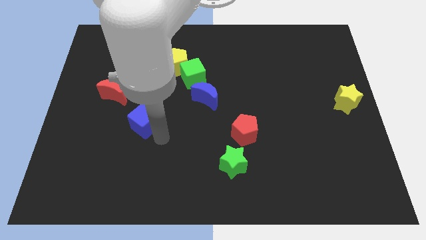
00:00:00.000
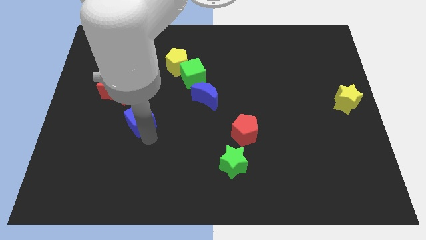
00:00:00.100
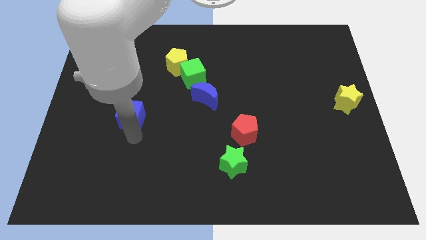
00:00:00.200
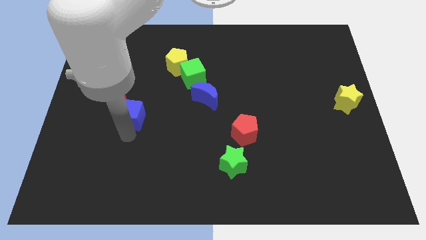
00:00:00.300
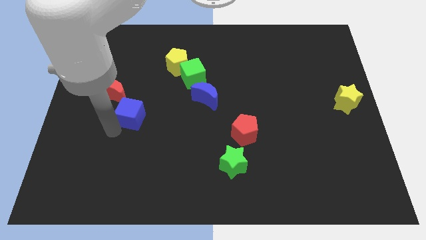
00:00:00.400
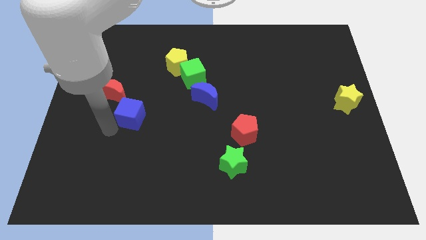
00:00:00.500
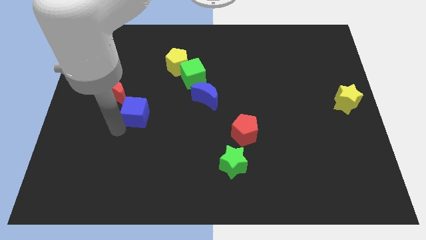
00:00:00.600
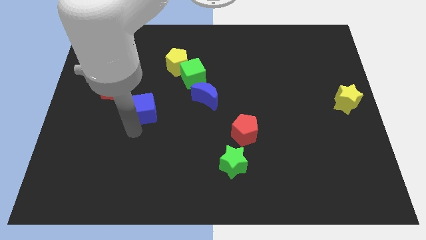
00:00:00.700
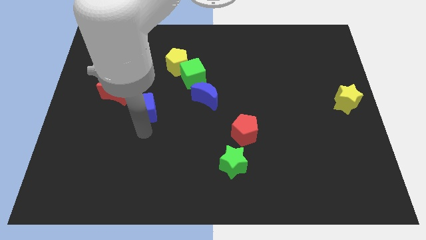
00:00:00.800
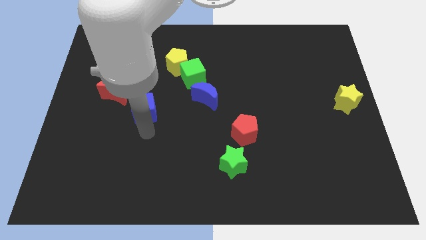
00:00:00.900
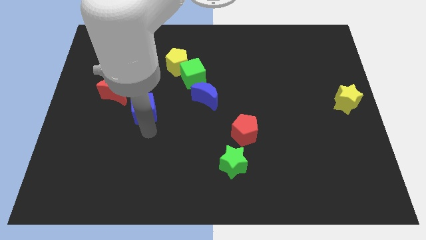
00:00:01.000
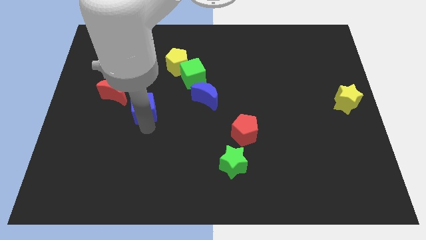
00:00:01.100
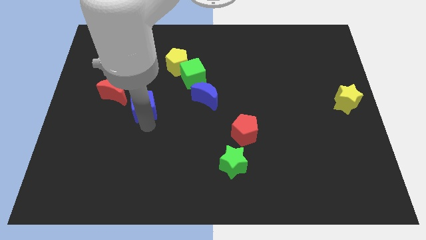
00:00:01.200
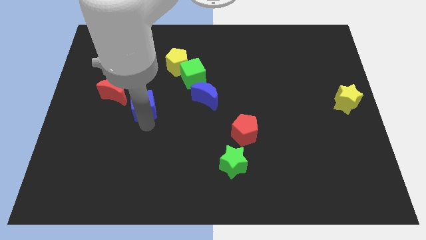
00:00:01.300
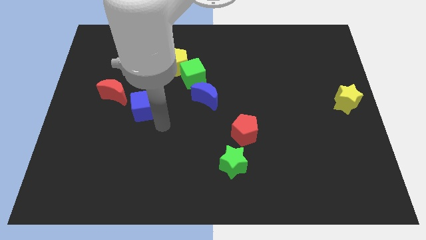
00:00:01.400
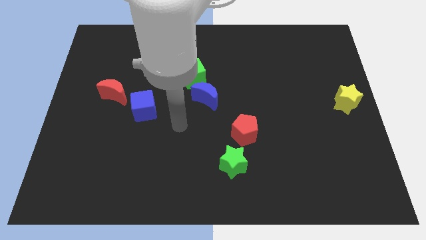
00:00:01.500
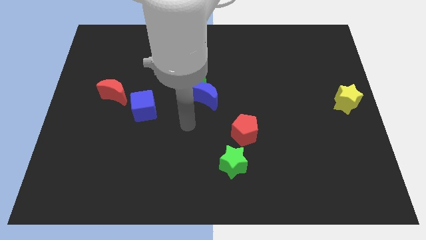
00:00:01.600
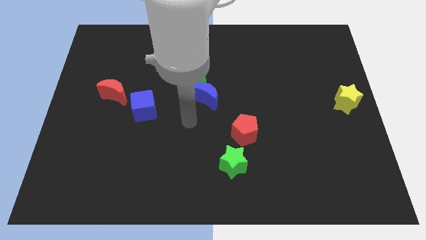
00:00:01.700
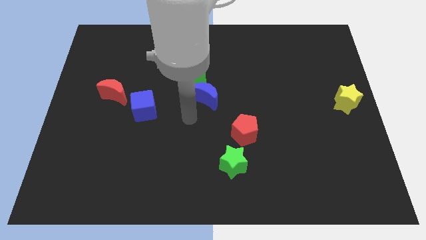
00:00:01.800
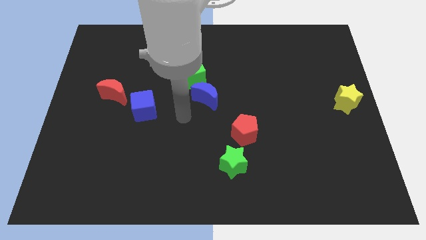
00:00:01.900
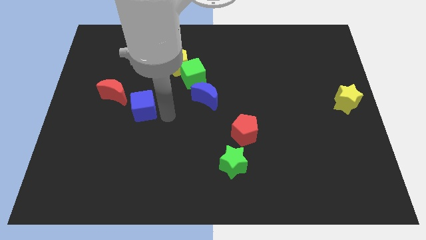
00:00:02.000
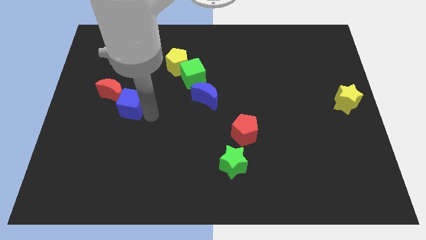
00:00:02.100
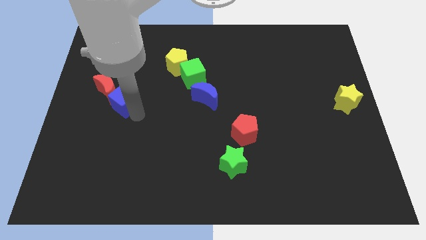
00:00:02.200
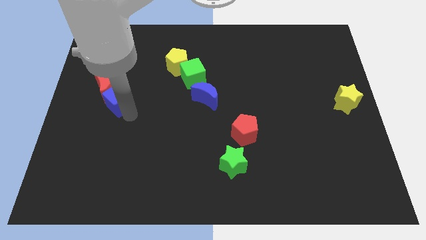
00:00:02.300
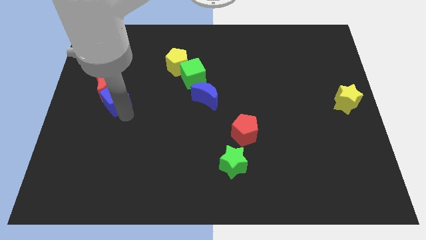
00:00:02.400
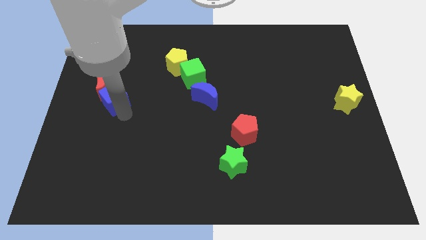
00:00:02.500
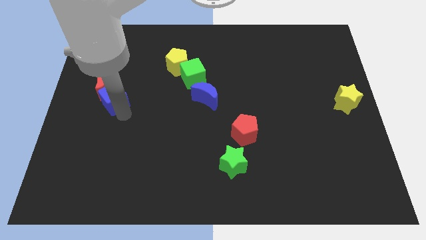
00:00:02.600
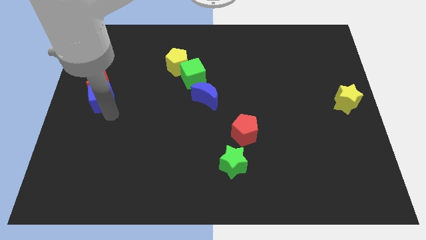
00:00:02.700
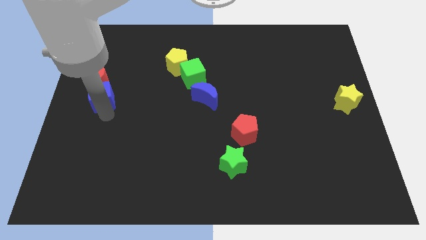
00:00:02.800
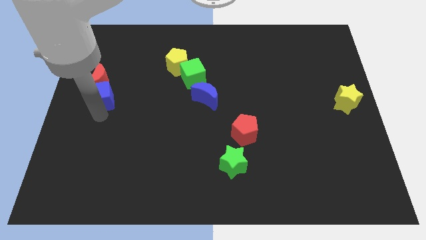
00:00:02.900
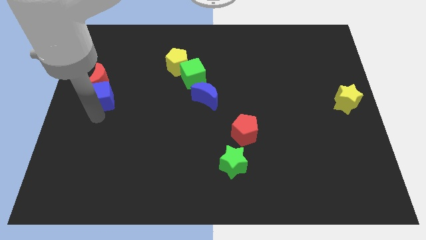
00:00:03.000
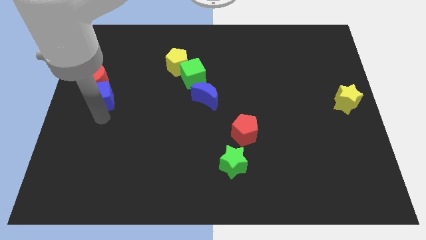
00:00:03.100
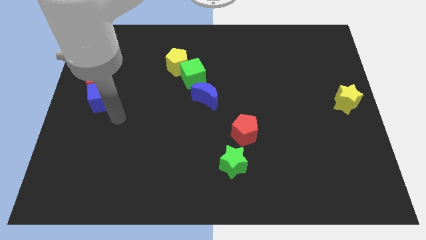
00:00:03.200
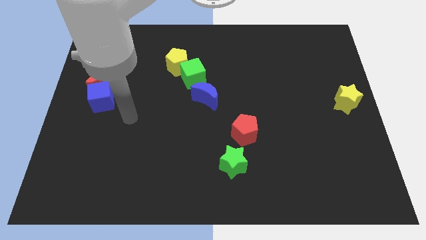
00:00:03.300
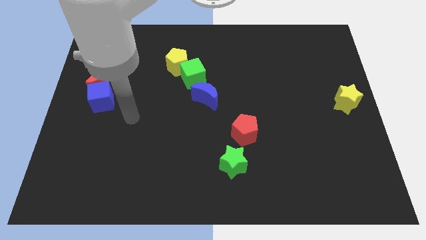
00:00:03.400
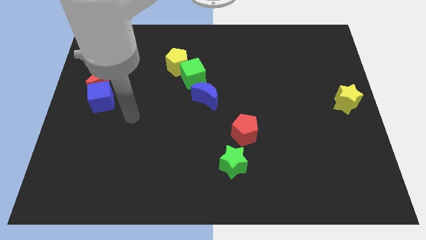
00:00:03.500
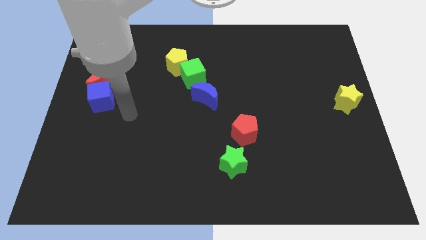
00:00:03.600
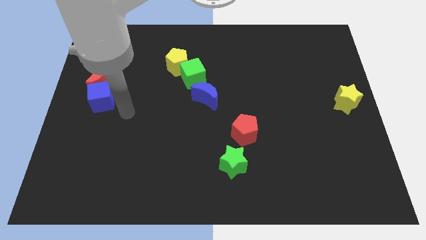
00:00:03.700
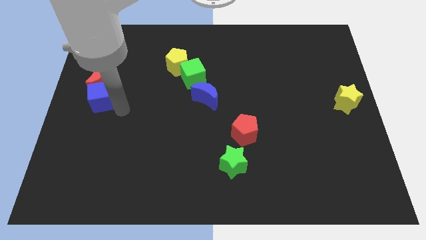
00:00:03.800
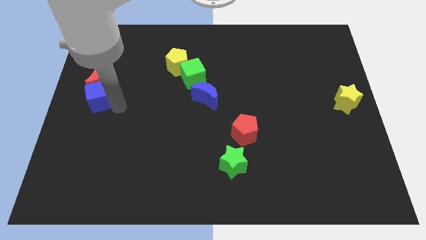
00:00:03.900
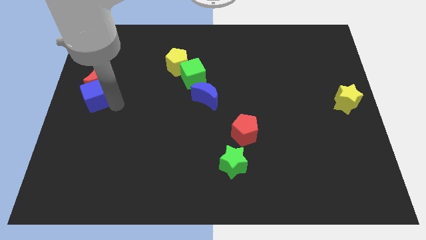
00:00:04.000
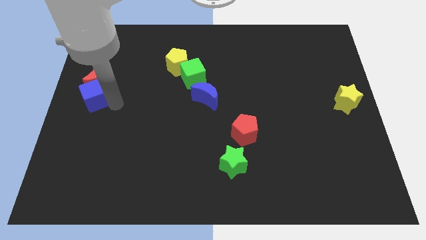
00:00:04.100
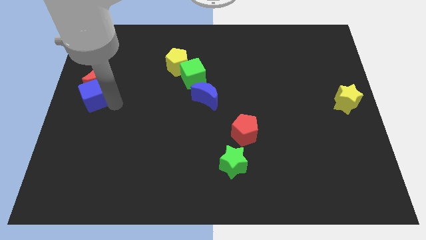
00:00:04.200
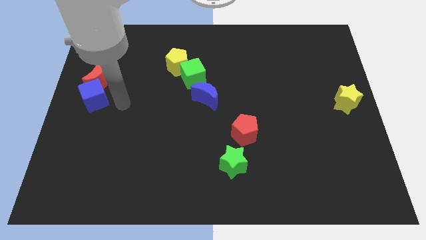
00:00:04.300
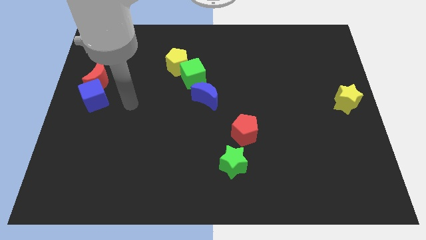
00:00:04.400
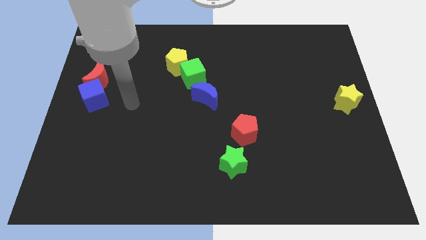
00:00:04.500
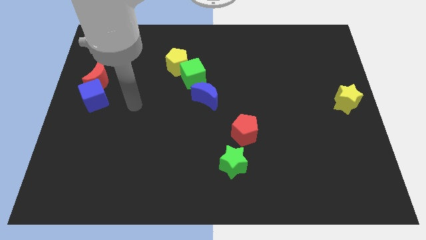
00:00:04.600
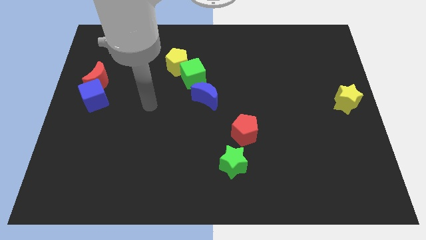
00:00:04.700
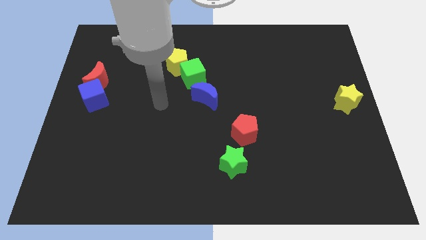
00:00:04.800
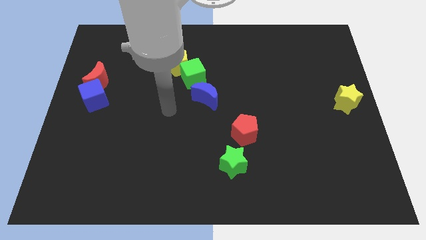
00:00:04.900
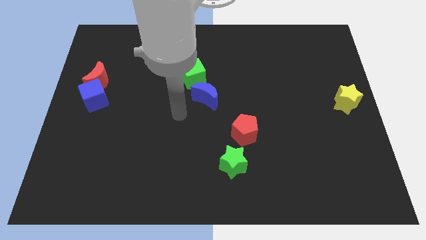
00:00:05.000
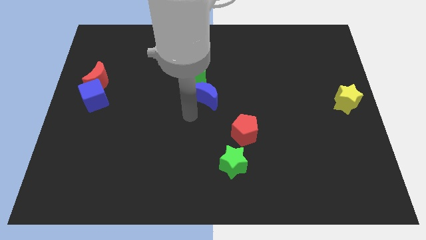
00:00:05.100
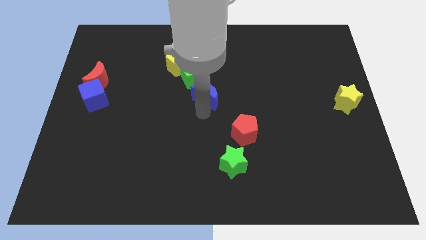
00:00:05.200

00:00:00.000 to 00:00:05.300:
move the red crescent and blue cube to the left

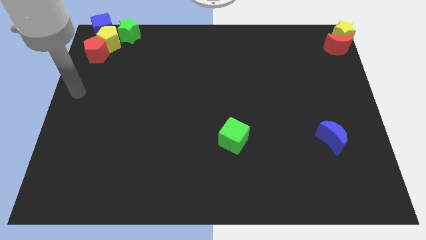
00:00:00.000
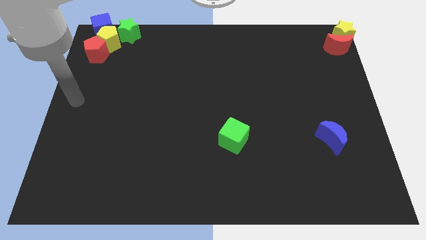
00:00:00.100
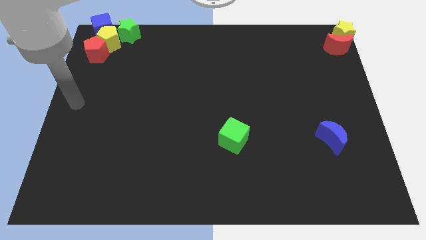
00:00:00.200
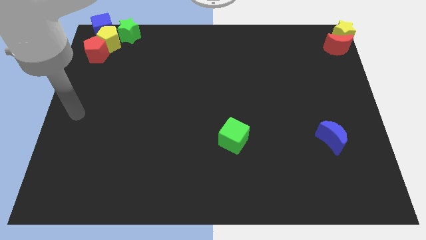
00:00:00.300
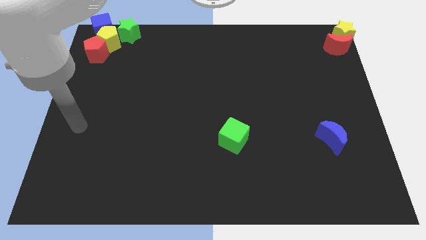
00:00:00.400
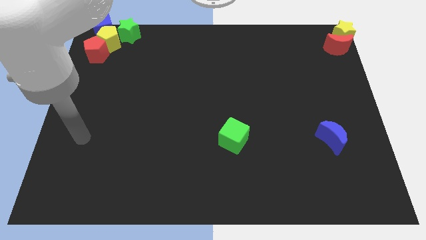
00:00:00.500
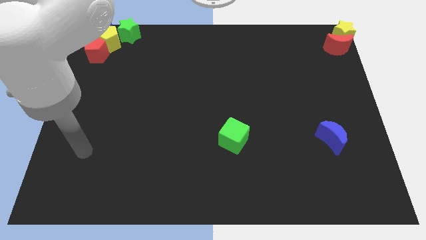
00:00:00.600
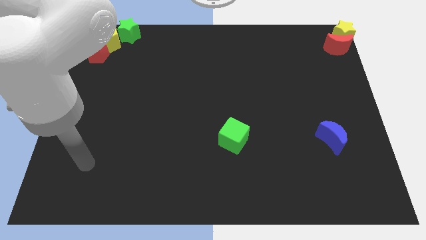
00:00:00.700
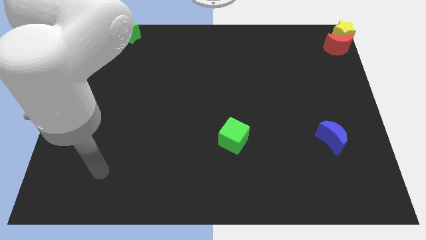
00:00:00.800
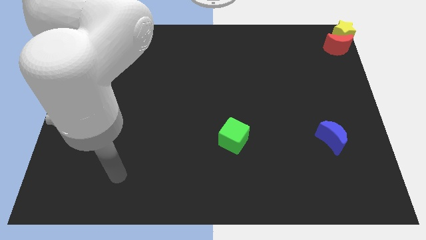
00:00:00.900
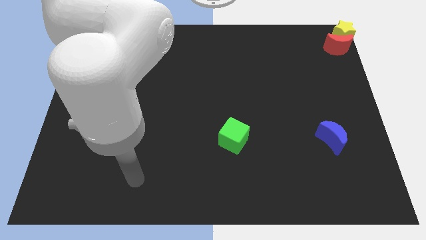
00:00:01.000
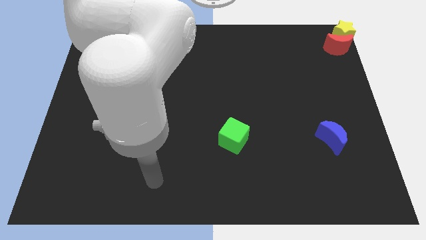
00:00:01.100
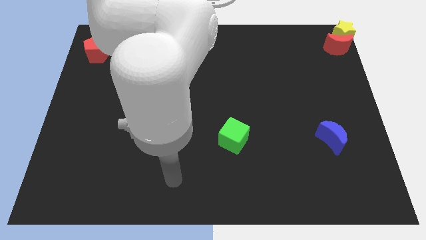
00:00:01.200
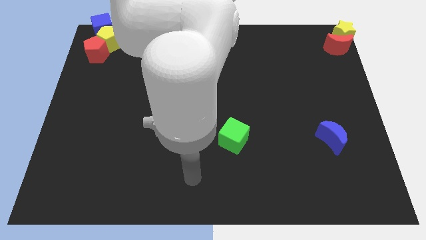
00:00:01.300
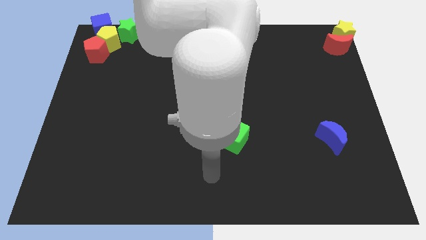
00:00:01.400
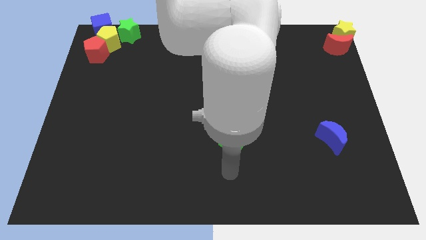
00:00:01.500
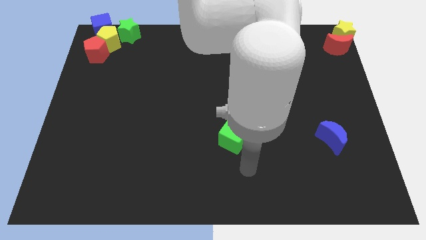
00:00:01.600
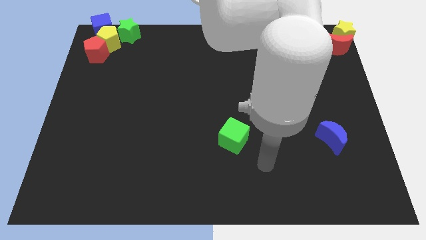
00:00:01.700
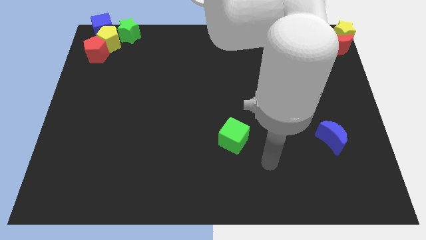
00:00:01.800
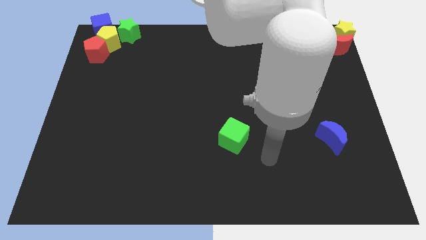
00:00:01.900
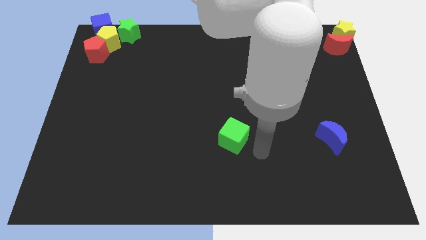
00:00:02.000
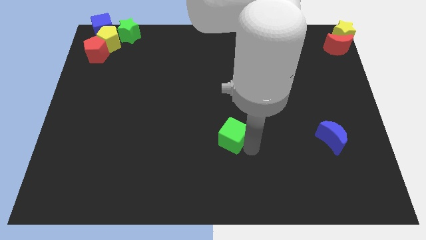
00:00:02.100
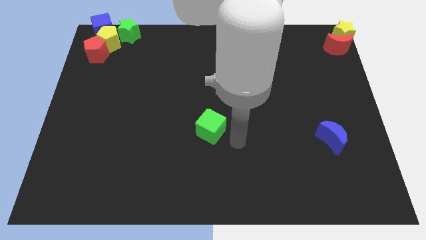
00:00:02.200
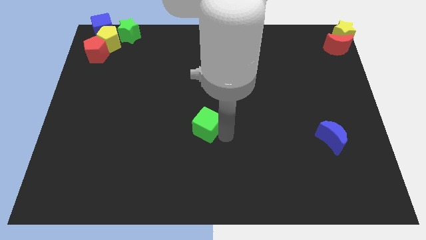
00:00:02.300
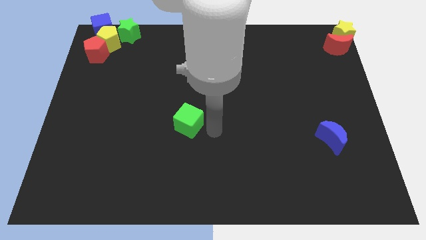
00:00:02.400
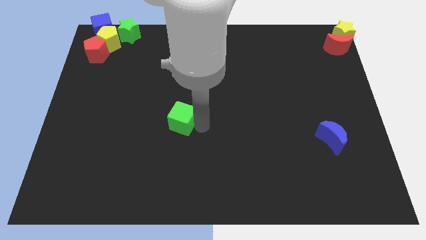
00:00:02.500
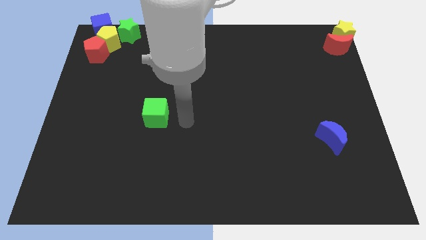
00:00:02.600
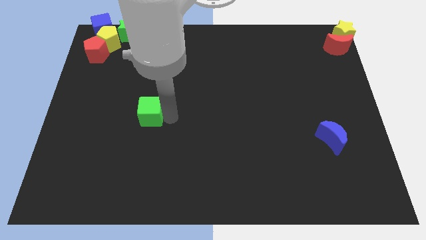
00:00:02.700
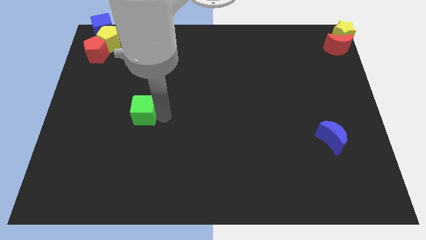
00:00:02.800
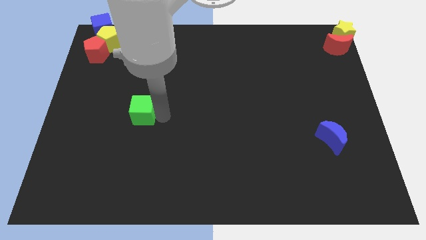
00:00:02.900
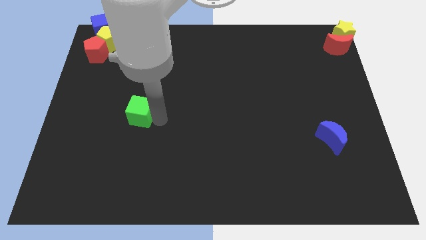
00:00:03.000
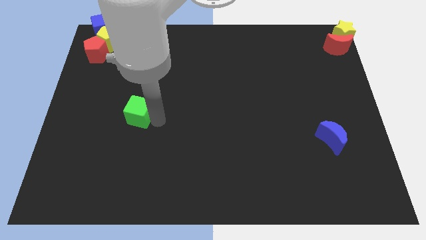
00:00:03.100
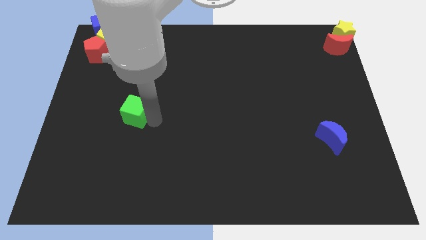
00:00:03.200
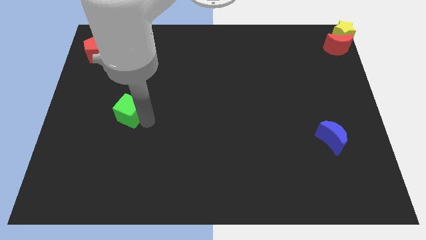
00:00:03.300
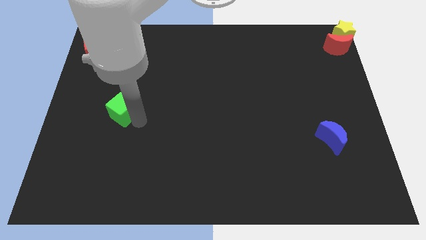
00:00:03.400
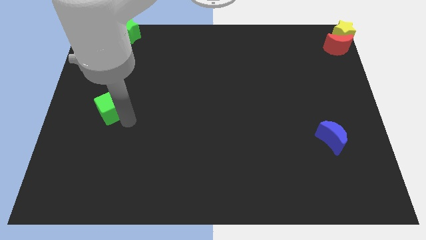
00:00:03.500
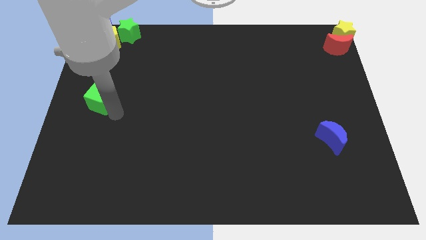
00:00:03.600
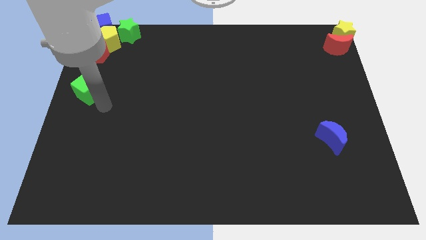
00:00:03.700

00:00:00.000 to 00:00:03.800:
place green cube to the bottom of red pentagon
